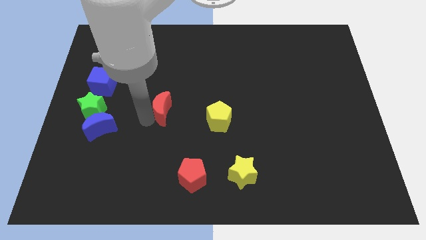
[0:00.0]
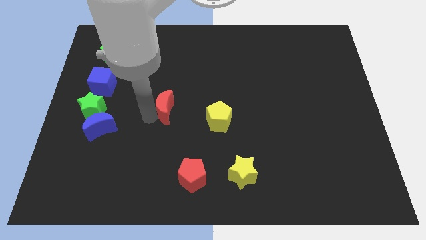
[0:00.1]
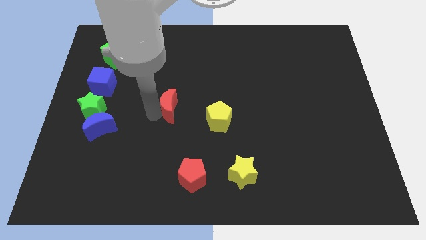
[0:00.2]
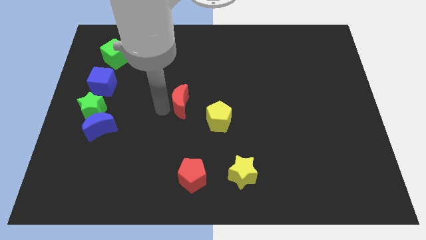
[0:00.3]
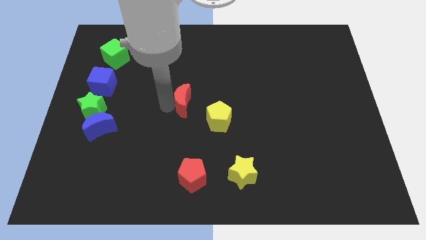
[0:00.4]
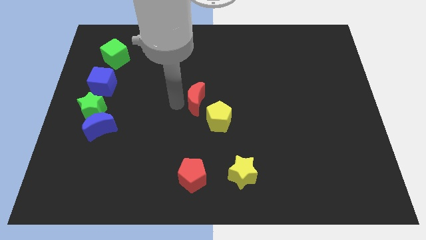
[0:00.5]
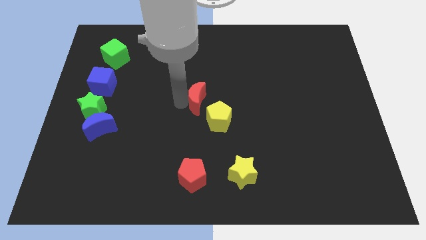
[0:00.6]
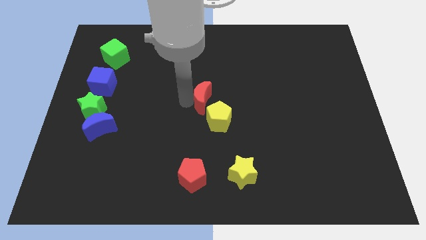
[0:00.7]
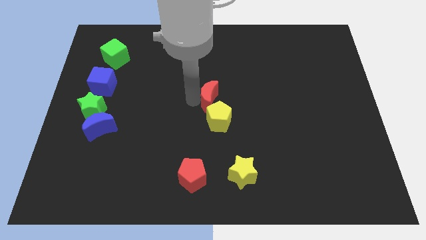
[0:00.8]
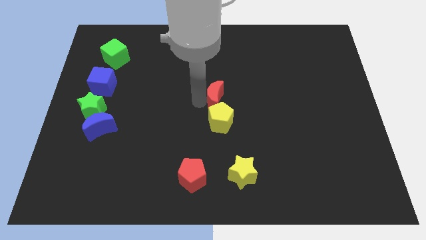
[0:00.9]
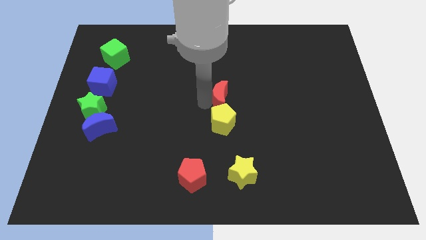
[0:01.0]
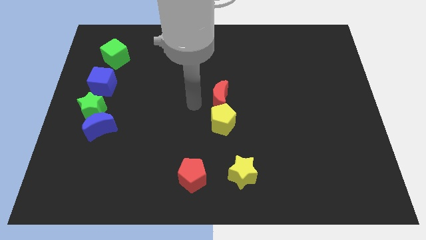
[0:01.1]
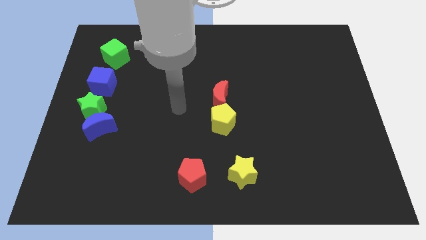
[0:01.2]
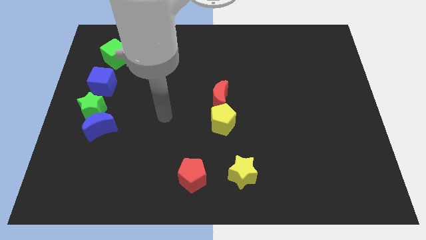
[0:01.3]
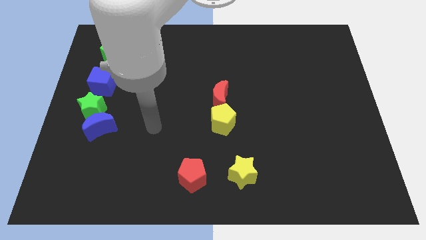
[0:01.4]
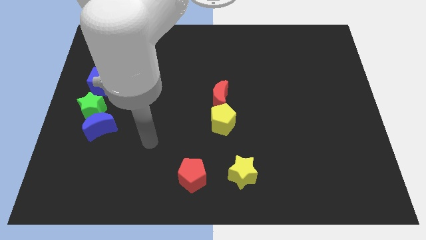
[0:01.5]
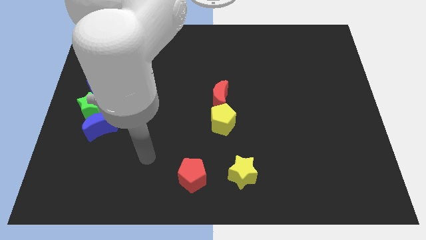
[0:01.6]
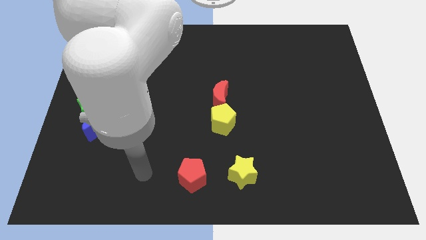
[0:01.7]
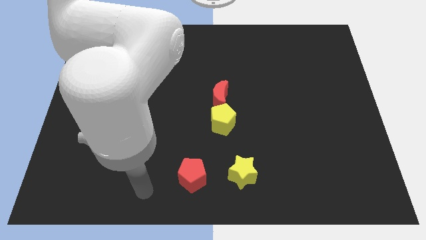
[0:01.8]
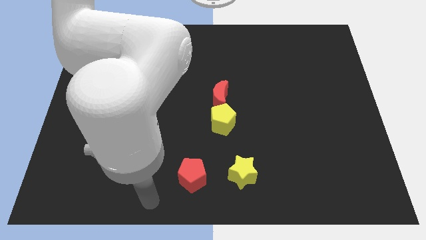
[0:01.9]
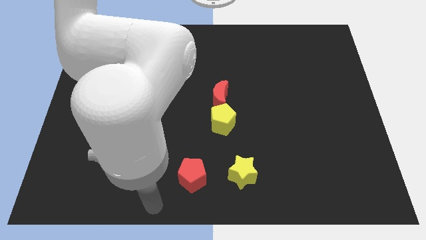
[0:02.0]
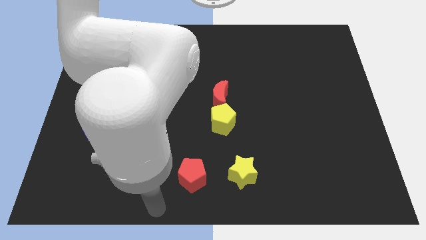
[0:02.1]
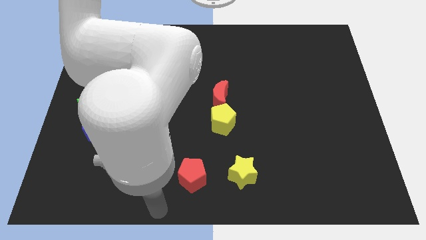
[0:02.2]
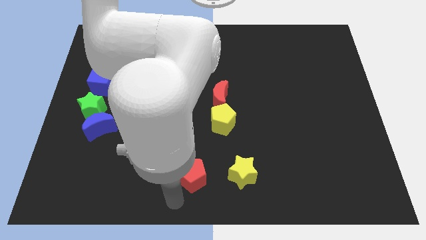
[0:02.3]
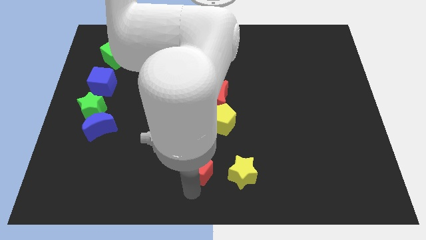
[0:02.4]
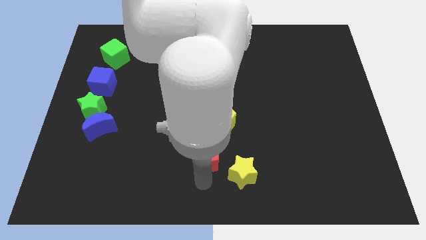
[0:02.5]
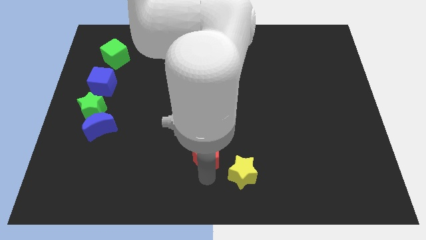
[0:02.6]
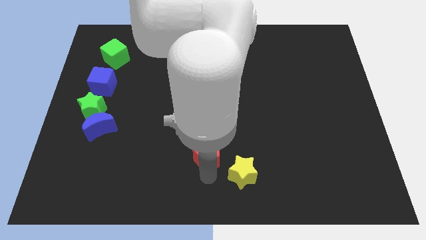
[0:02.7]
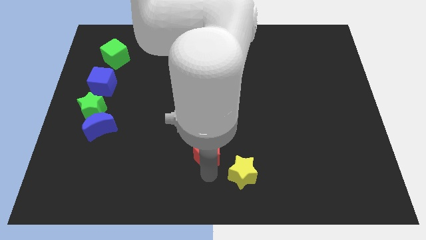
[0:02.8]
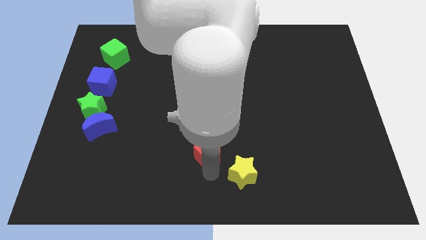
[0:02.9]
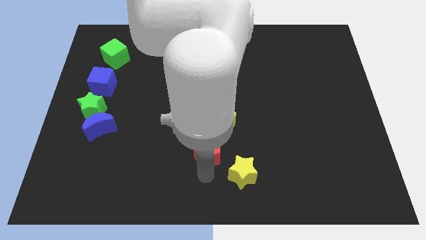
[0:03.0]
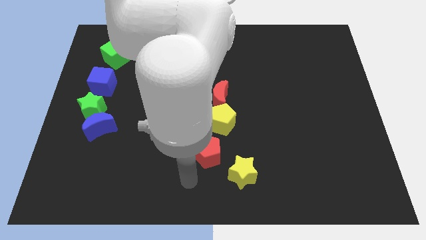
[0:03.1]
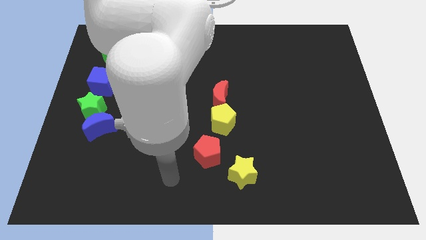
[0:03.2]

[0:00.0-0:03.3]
slightly move the red pentagon towards up

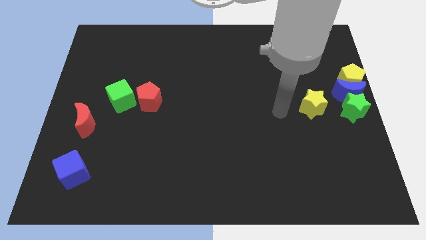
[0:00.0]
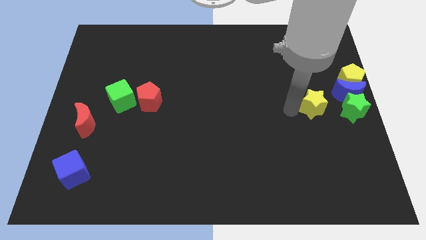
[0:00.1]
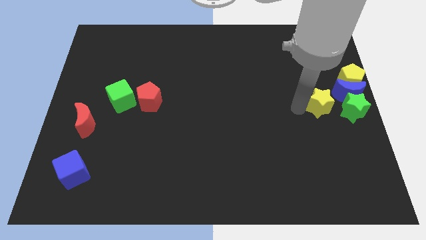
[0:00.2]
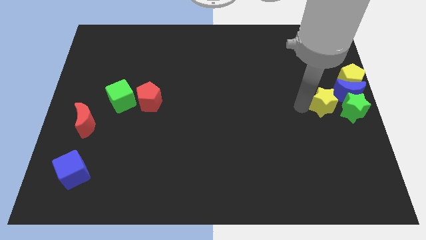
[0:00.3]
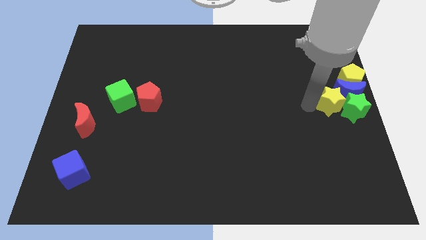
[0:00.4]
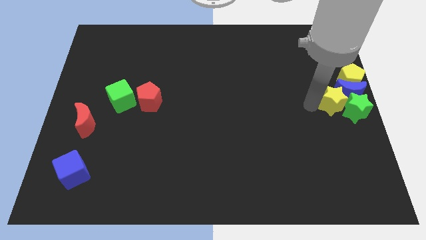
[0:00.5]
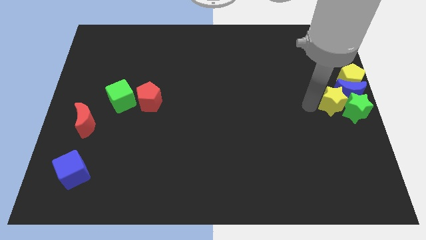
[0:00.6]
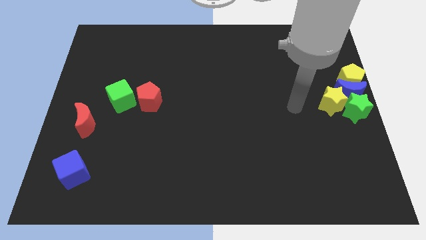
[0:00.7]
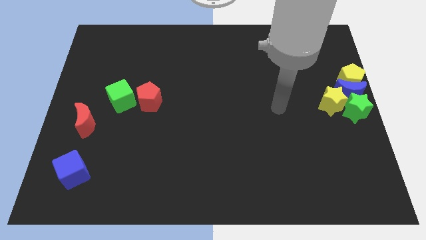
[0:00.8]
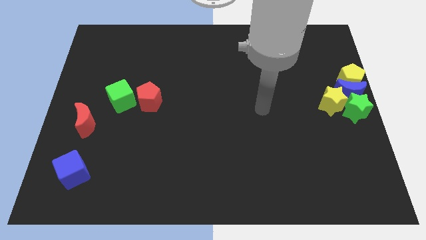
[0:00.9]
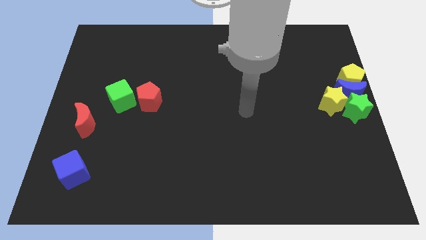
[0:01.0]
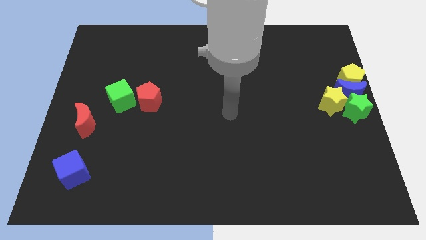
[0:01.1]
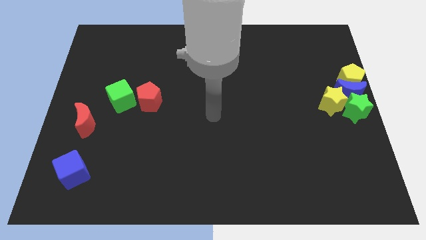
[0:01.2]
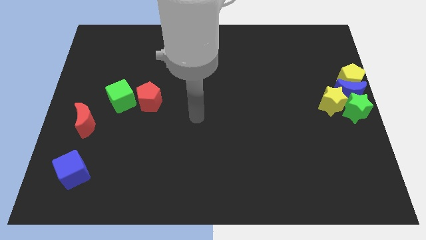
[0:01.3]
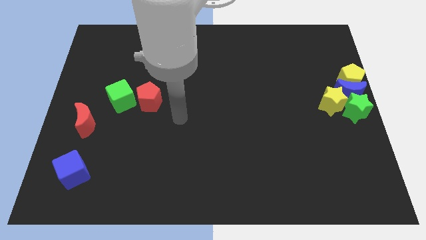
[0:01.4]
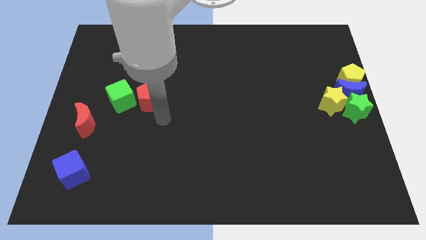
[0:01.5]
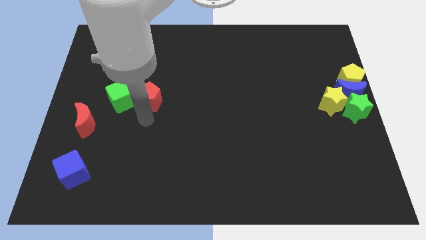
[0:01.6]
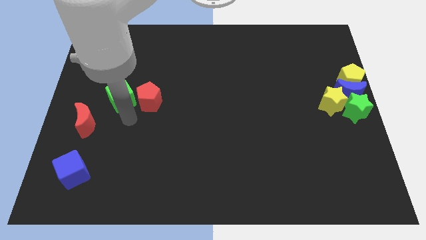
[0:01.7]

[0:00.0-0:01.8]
push the yellow star at the center right

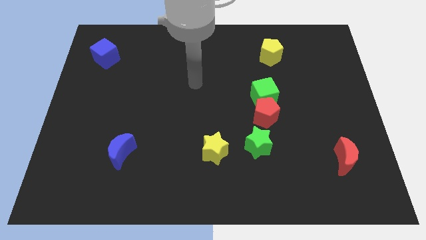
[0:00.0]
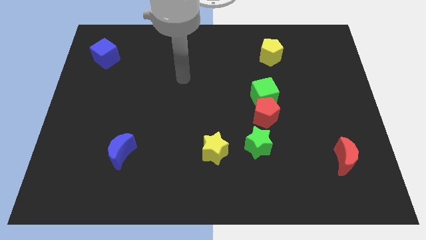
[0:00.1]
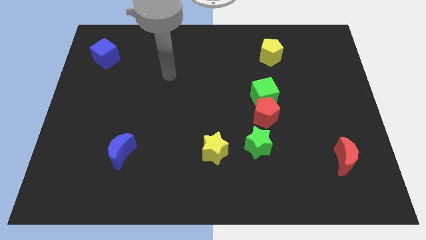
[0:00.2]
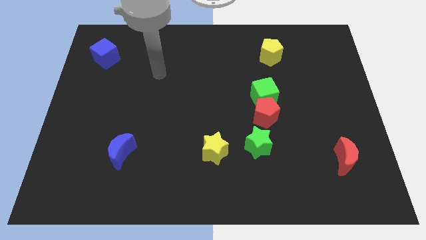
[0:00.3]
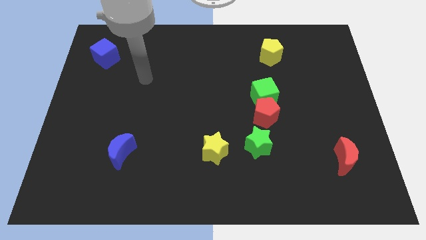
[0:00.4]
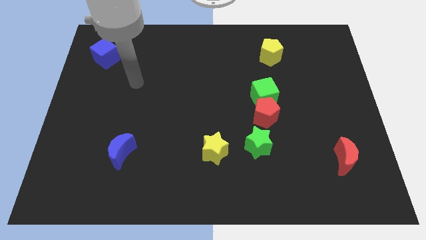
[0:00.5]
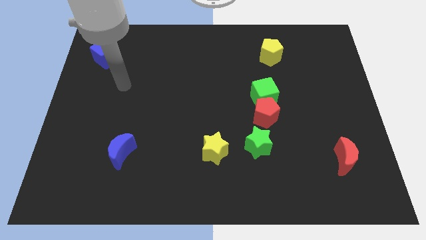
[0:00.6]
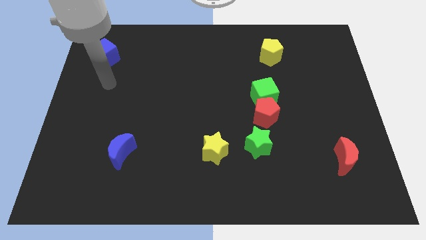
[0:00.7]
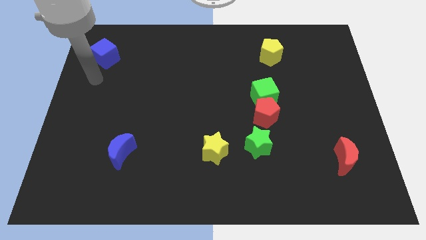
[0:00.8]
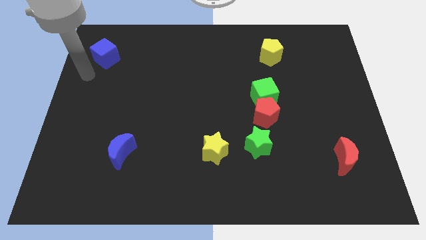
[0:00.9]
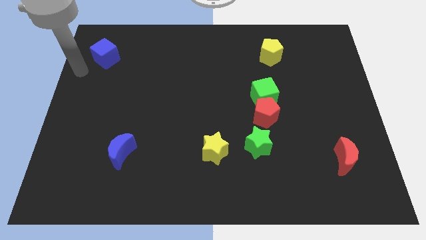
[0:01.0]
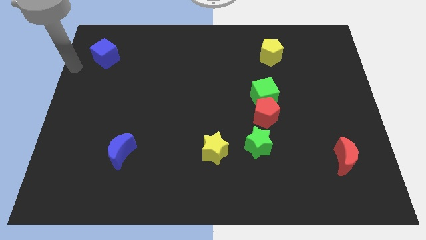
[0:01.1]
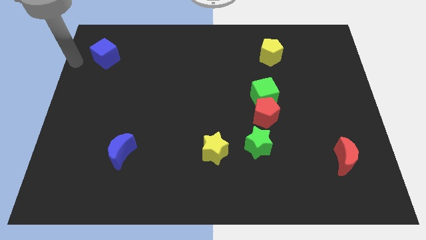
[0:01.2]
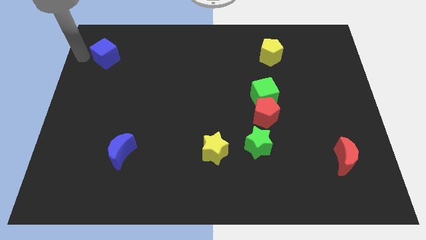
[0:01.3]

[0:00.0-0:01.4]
place the arm to the left of the blue cube

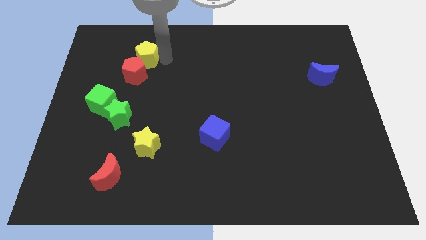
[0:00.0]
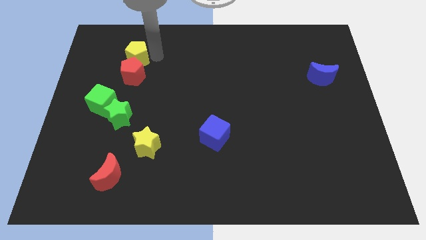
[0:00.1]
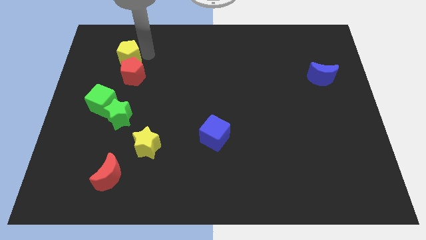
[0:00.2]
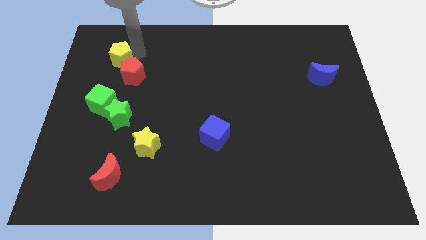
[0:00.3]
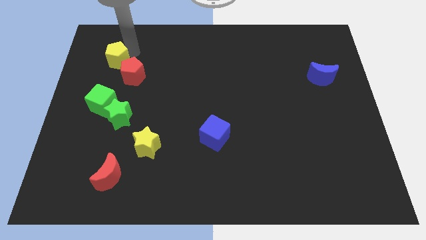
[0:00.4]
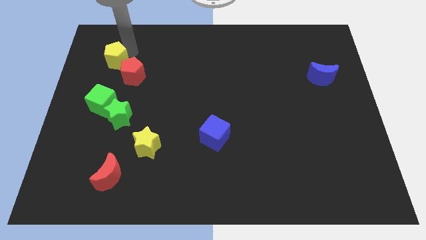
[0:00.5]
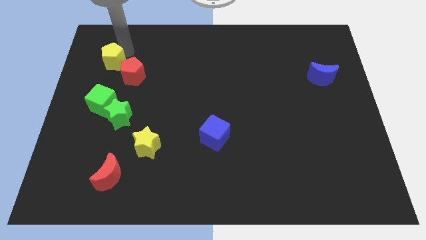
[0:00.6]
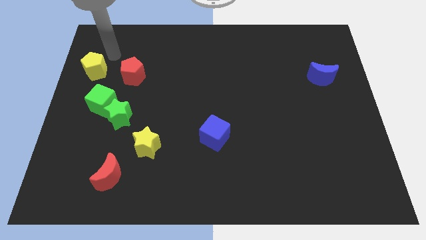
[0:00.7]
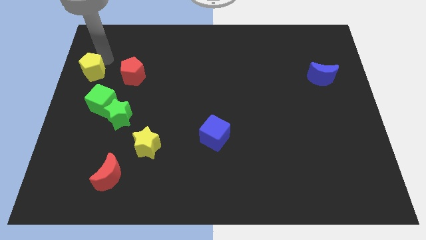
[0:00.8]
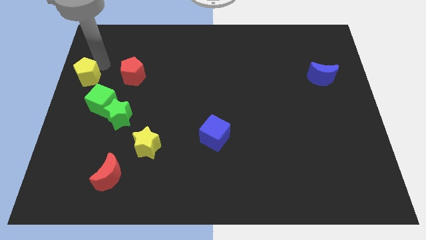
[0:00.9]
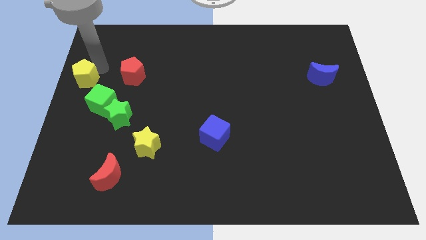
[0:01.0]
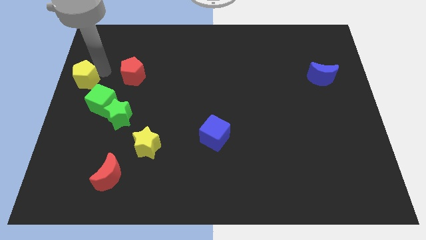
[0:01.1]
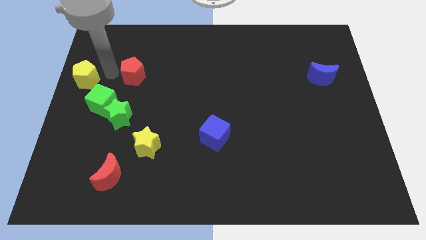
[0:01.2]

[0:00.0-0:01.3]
push the yellow pentagon to the left of the red pentagon

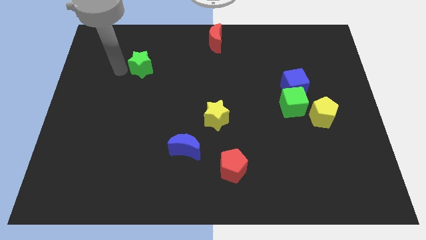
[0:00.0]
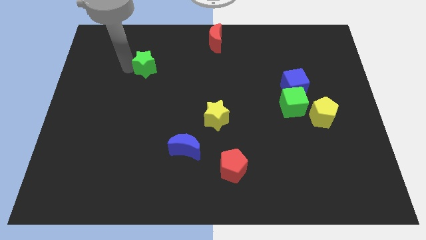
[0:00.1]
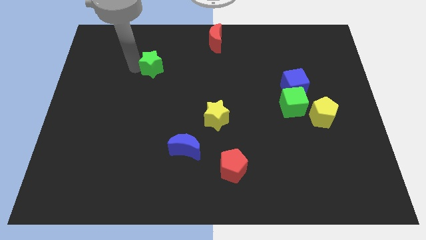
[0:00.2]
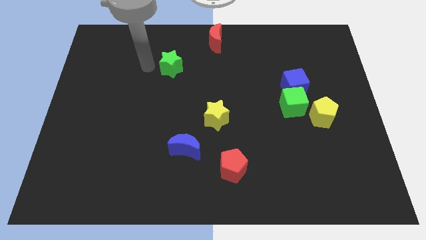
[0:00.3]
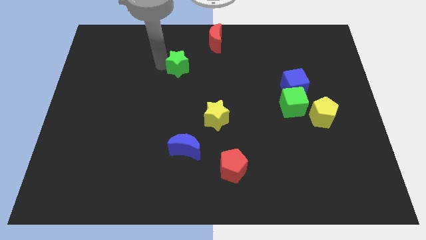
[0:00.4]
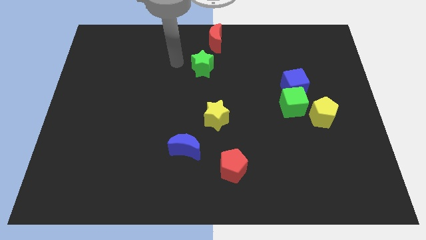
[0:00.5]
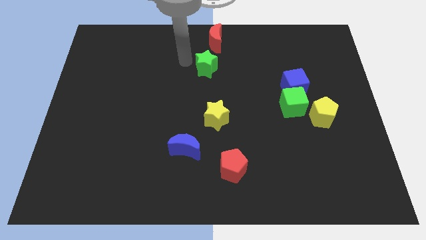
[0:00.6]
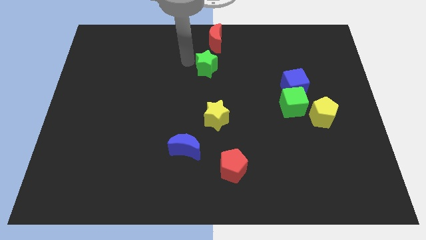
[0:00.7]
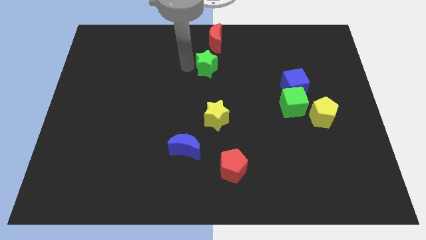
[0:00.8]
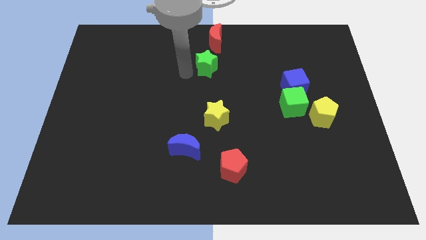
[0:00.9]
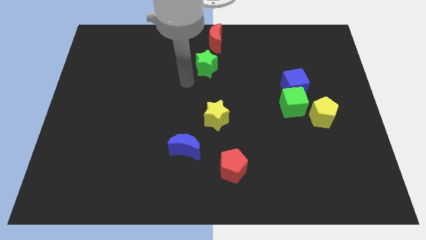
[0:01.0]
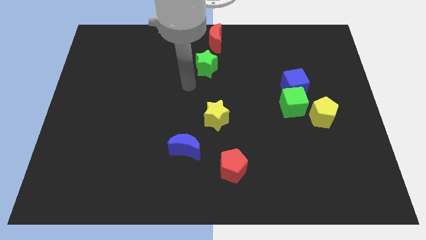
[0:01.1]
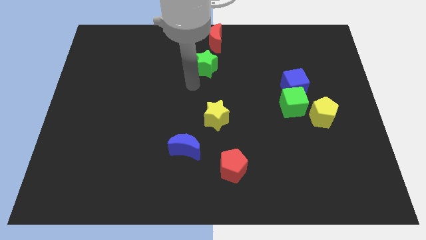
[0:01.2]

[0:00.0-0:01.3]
move green star towards center
